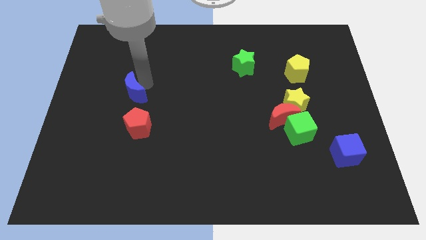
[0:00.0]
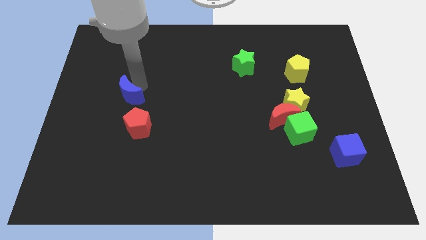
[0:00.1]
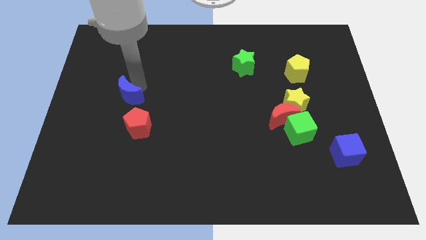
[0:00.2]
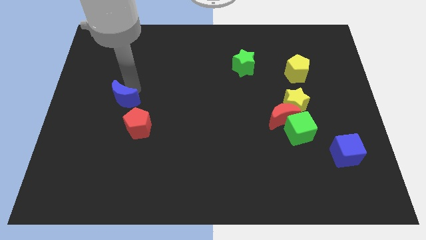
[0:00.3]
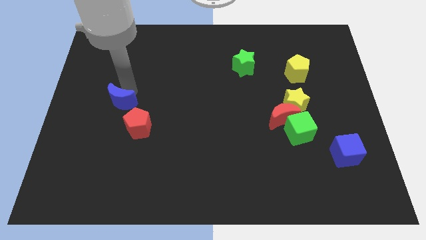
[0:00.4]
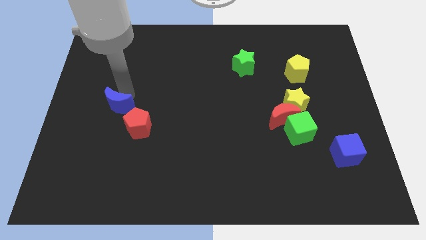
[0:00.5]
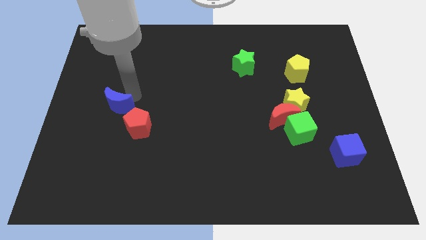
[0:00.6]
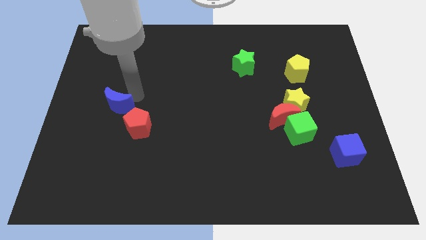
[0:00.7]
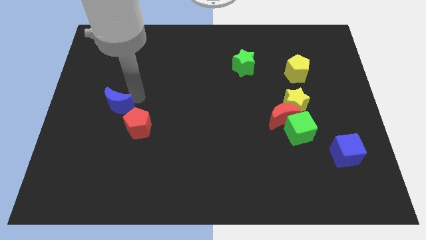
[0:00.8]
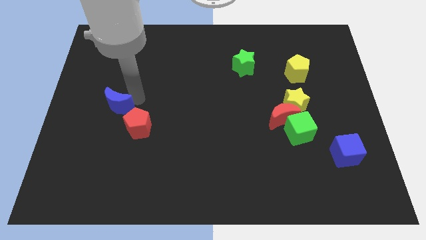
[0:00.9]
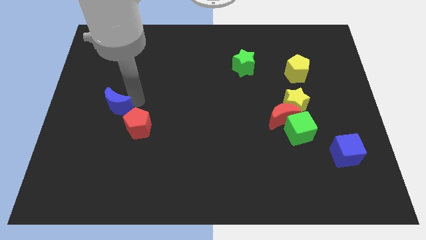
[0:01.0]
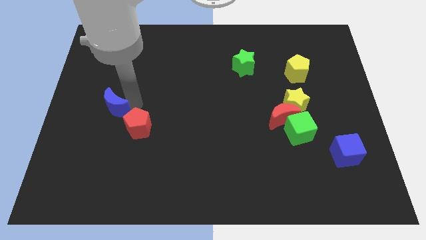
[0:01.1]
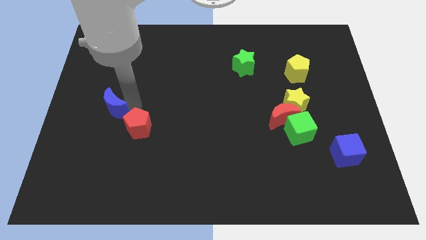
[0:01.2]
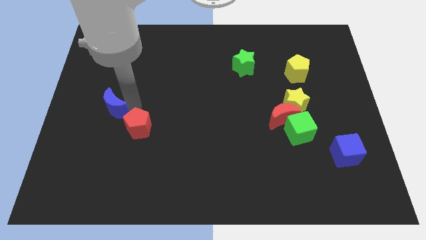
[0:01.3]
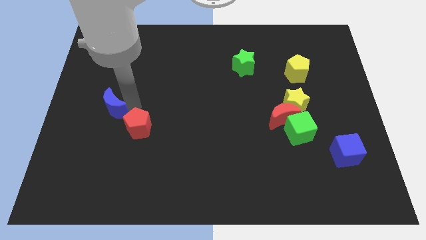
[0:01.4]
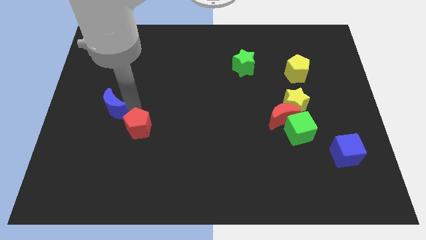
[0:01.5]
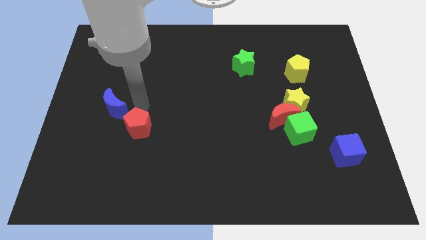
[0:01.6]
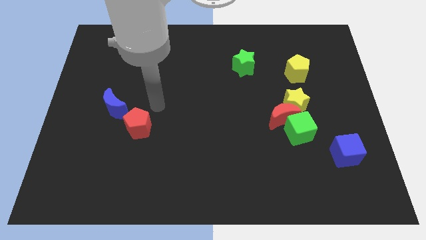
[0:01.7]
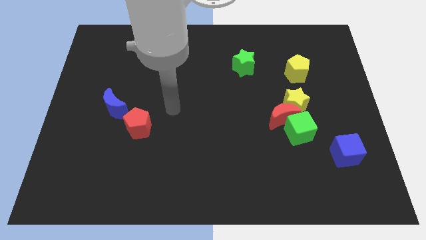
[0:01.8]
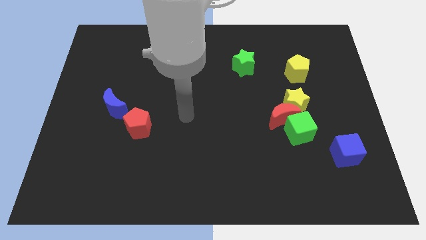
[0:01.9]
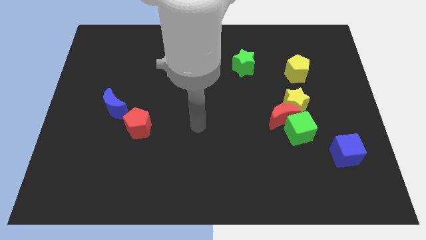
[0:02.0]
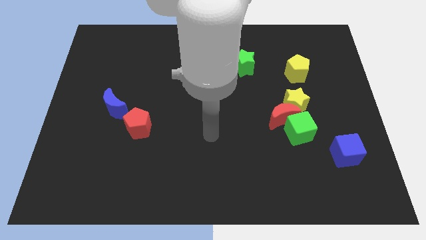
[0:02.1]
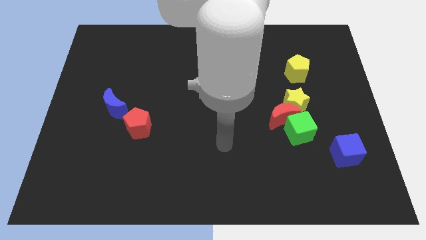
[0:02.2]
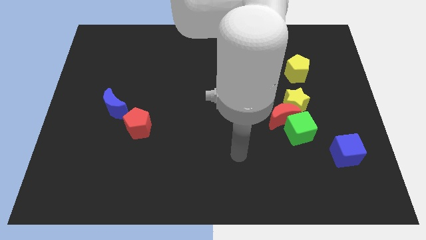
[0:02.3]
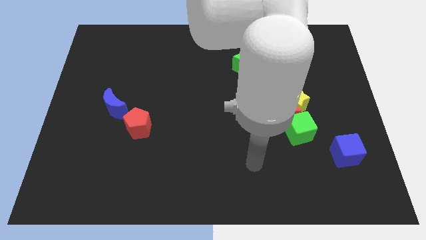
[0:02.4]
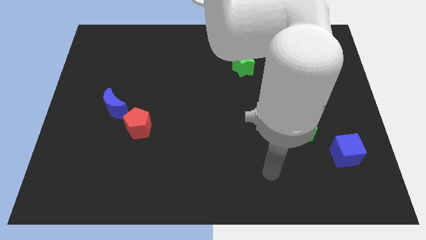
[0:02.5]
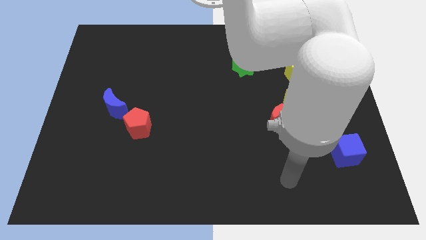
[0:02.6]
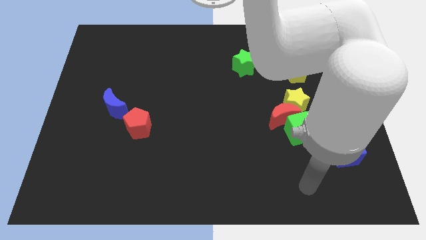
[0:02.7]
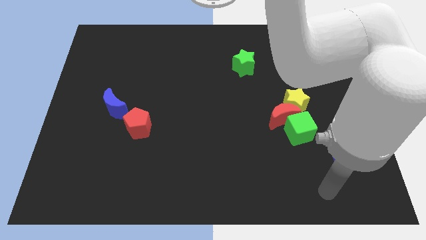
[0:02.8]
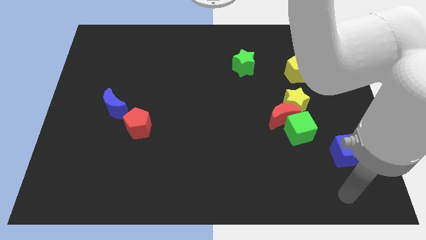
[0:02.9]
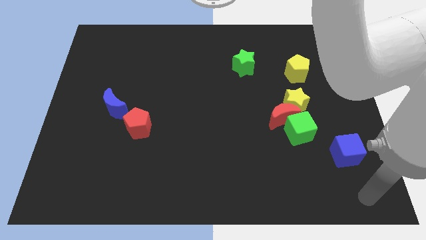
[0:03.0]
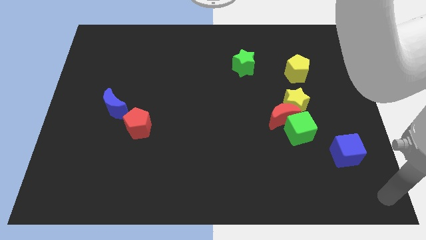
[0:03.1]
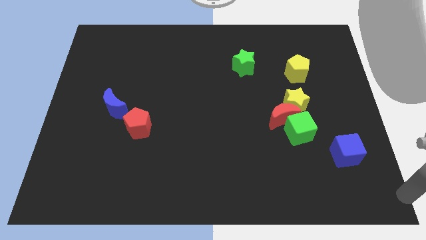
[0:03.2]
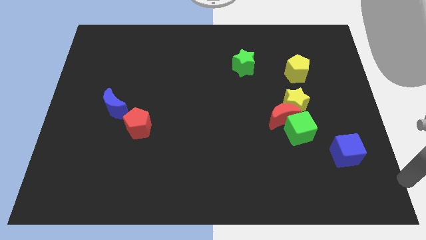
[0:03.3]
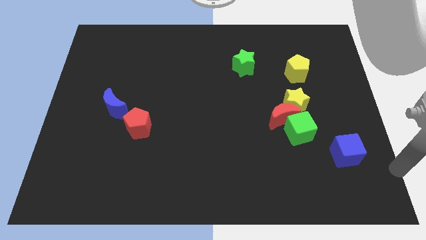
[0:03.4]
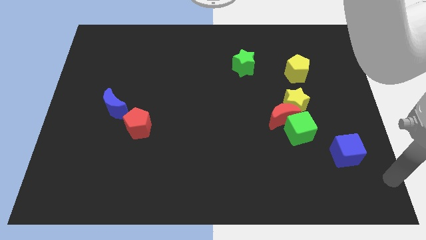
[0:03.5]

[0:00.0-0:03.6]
place the blue crescent close to left of red pentagon

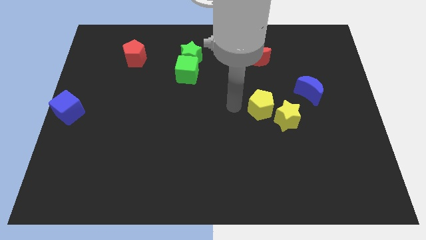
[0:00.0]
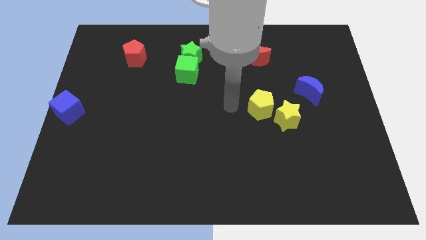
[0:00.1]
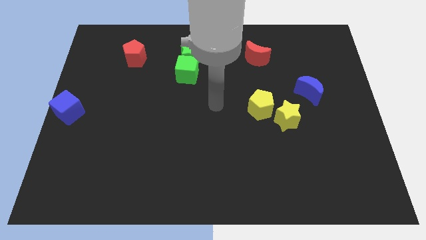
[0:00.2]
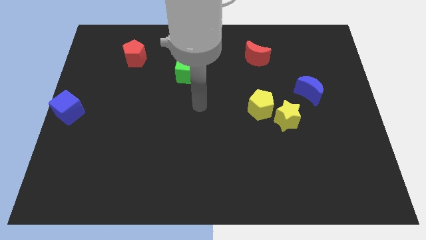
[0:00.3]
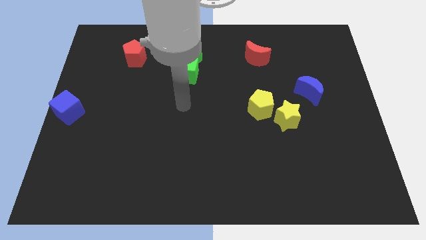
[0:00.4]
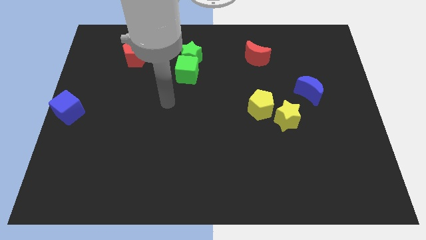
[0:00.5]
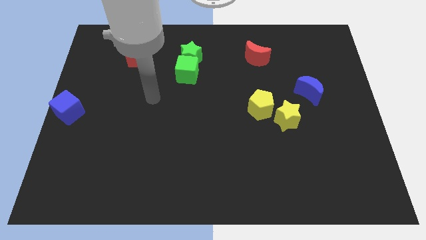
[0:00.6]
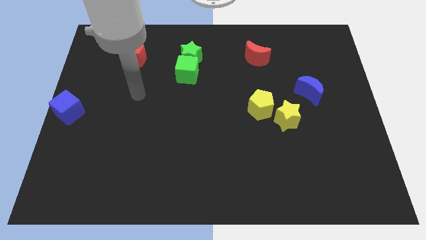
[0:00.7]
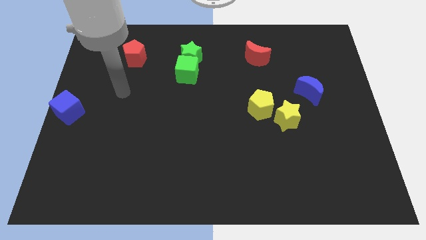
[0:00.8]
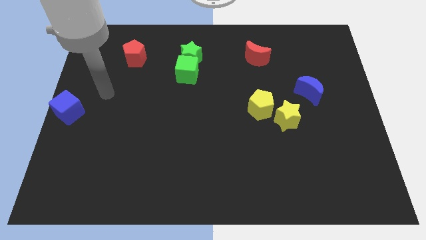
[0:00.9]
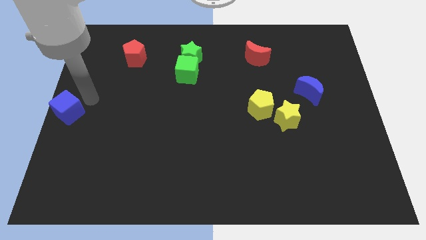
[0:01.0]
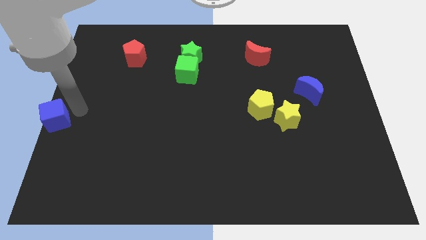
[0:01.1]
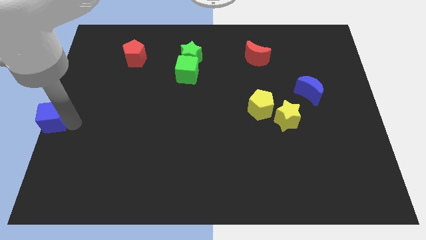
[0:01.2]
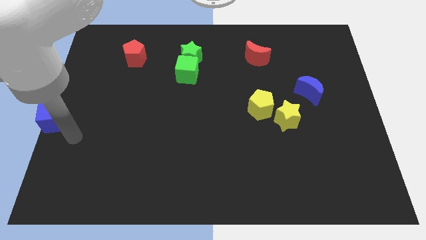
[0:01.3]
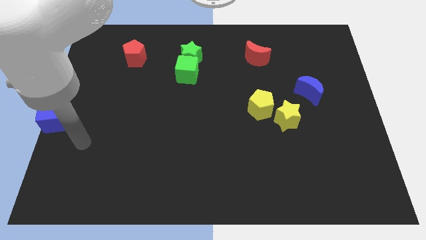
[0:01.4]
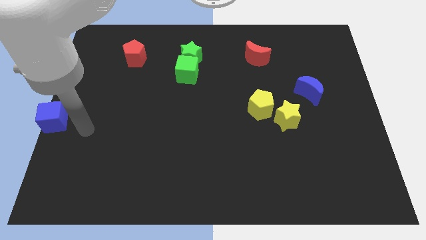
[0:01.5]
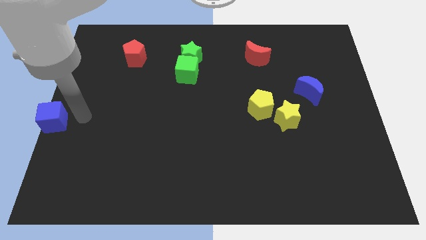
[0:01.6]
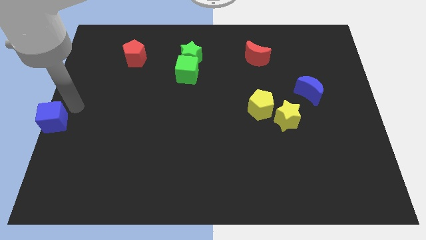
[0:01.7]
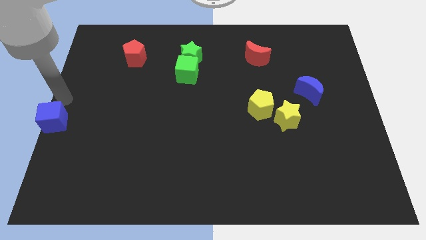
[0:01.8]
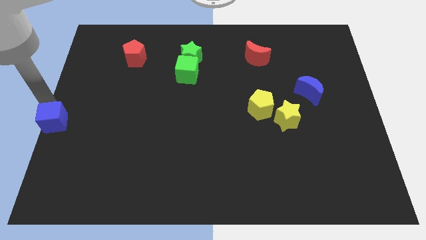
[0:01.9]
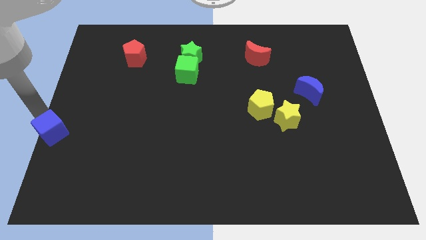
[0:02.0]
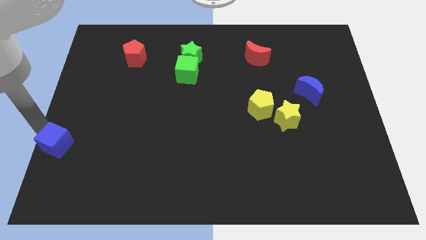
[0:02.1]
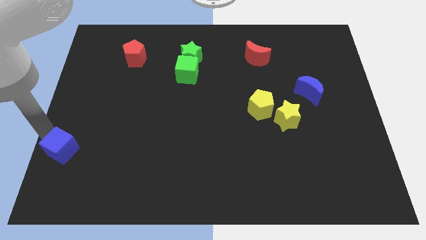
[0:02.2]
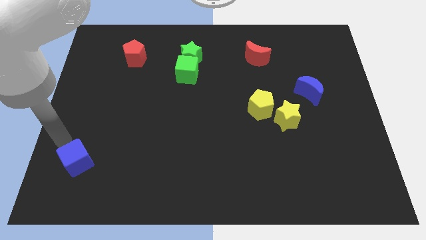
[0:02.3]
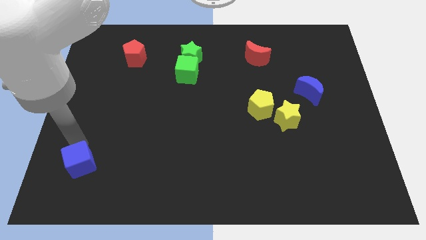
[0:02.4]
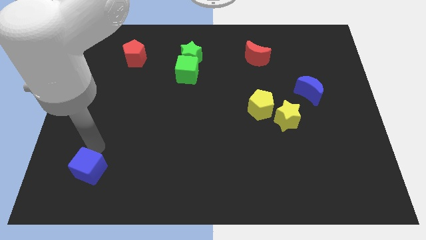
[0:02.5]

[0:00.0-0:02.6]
push the blue cube towards the bottom side of the board

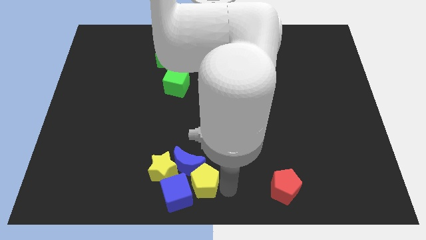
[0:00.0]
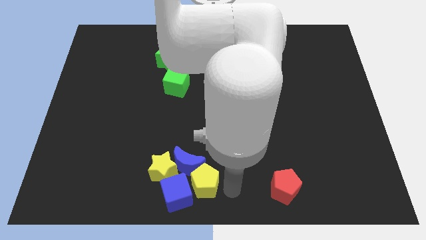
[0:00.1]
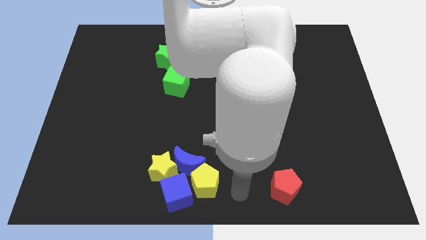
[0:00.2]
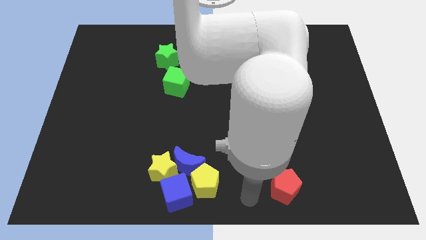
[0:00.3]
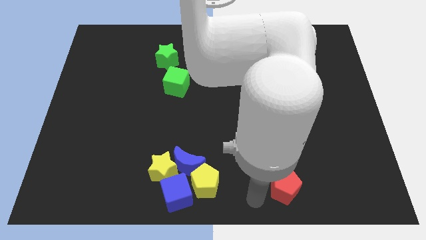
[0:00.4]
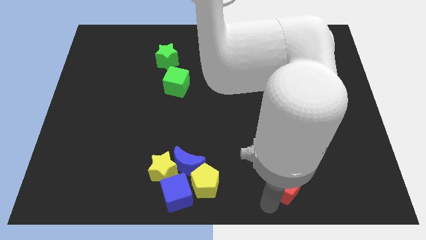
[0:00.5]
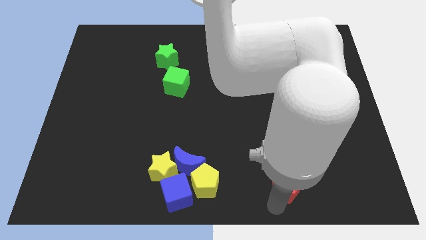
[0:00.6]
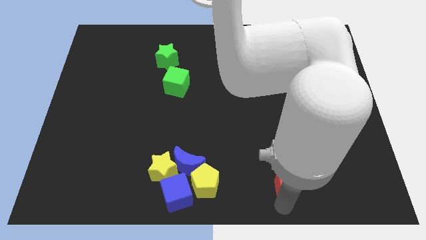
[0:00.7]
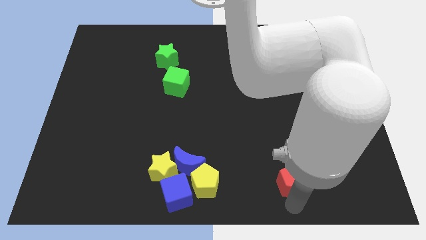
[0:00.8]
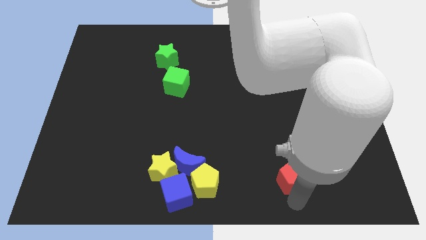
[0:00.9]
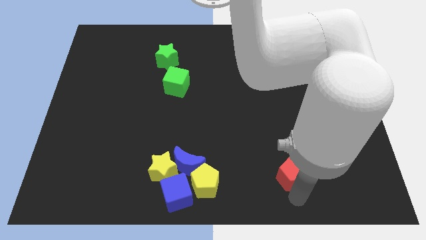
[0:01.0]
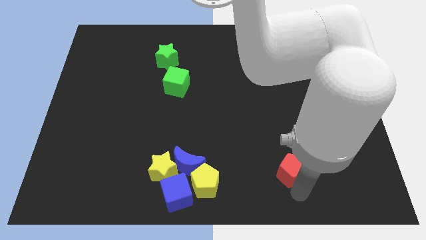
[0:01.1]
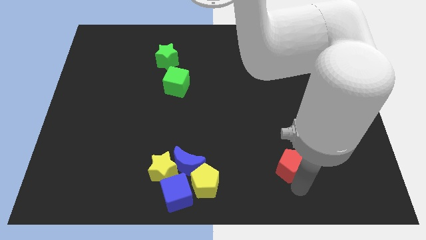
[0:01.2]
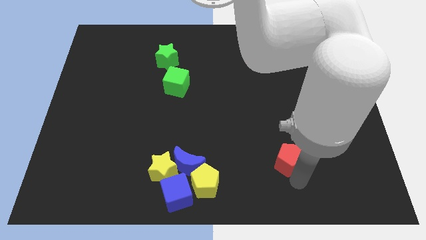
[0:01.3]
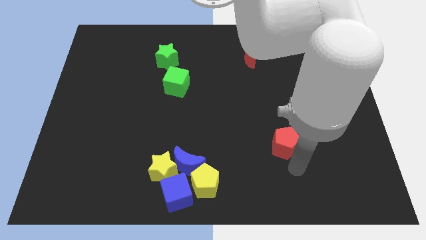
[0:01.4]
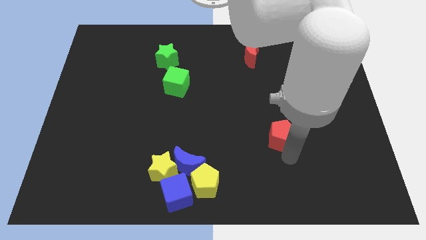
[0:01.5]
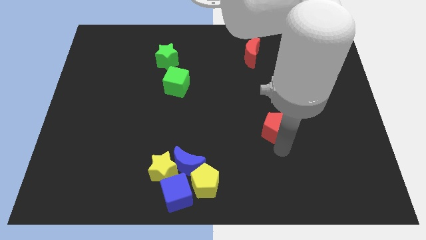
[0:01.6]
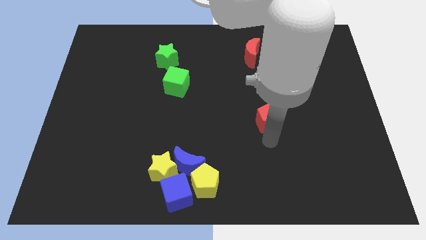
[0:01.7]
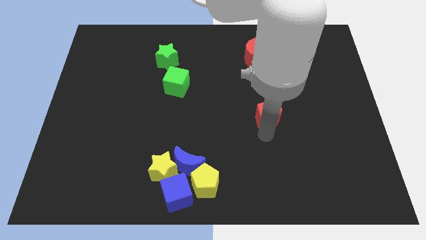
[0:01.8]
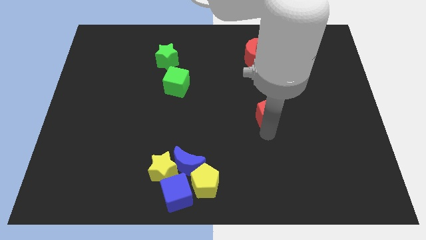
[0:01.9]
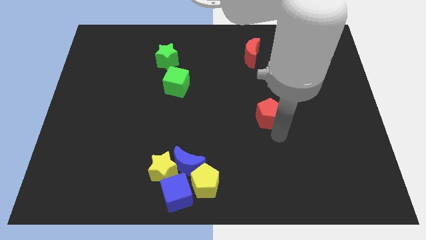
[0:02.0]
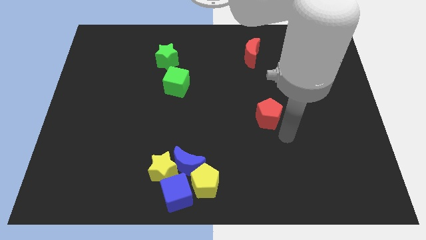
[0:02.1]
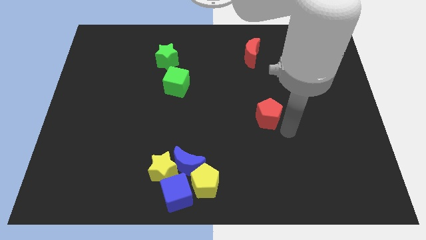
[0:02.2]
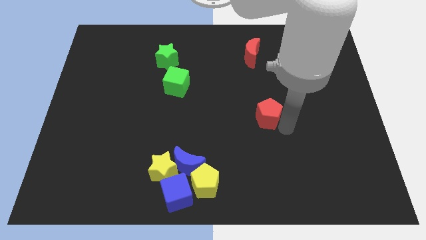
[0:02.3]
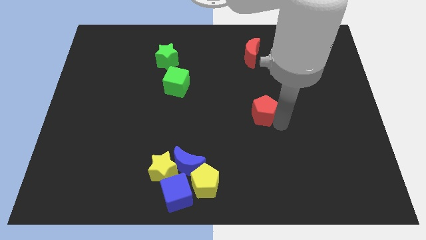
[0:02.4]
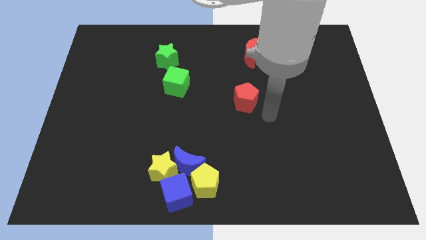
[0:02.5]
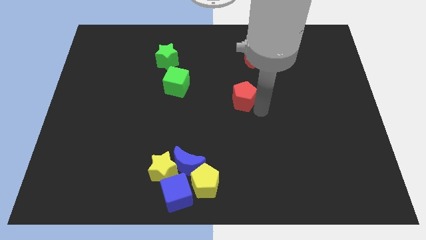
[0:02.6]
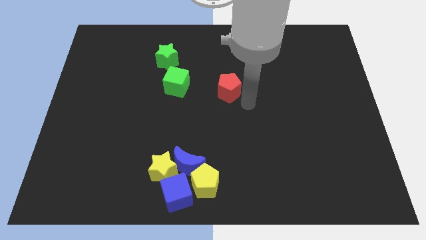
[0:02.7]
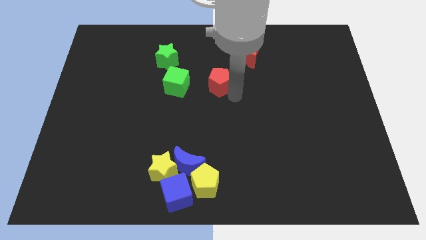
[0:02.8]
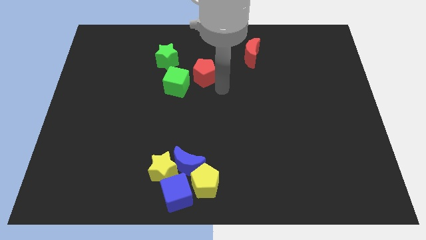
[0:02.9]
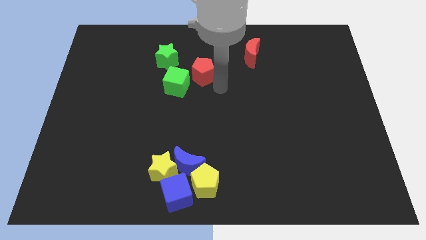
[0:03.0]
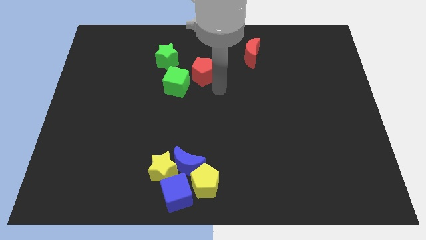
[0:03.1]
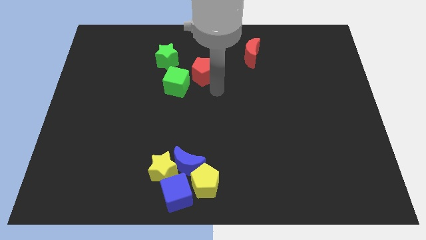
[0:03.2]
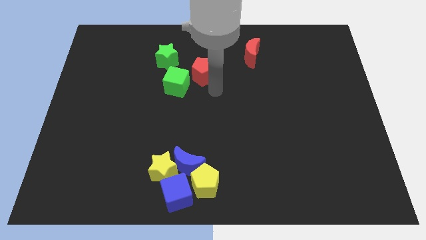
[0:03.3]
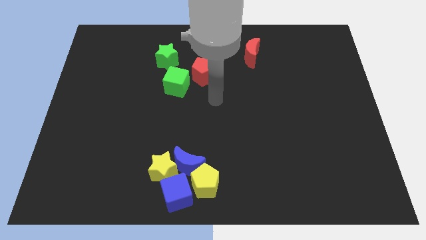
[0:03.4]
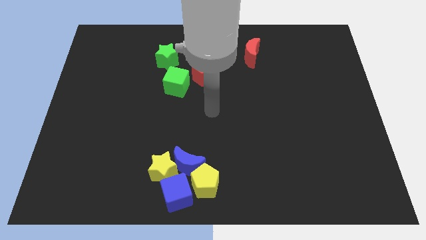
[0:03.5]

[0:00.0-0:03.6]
move the red pentagon to the top right of the green cube
